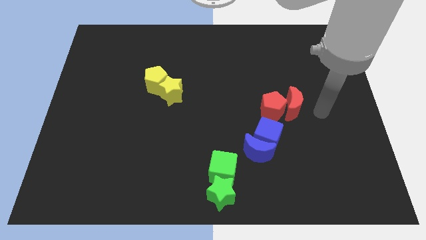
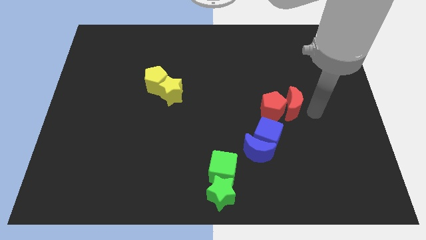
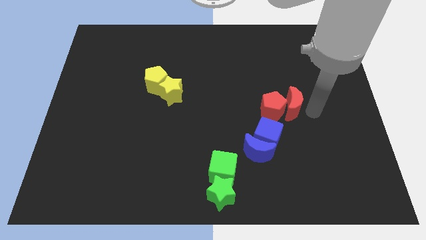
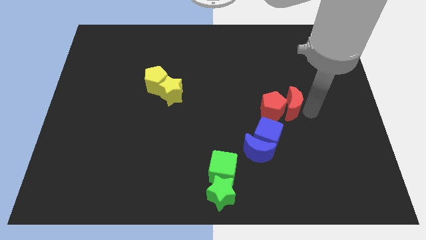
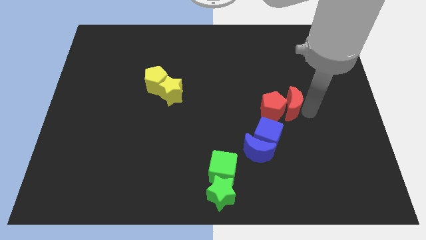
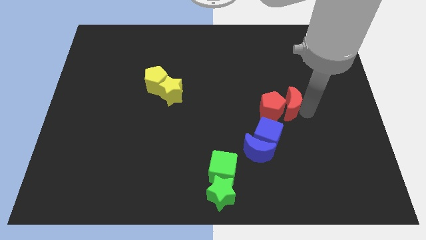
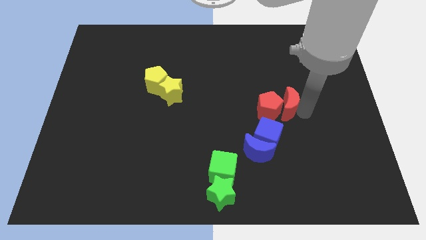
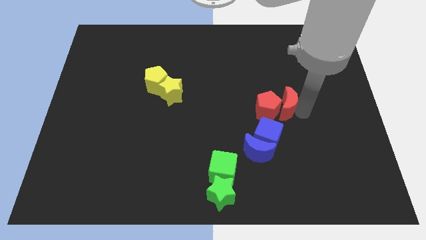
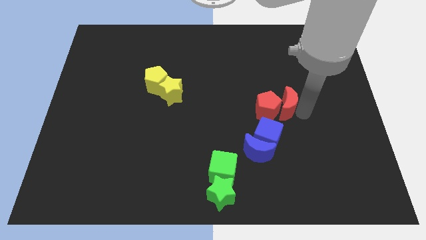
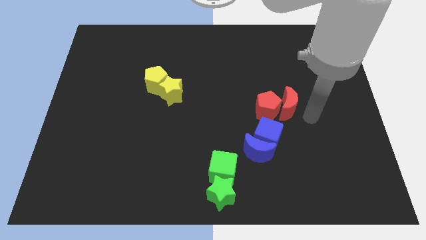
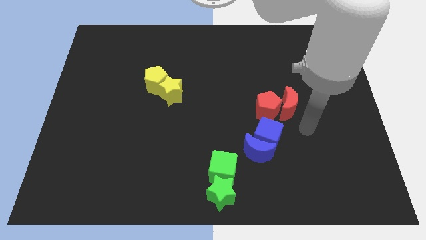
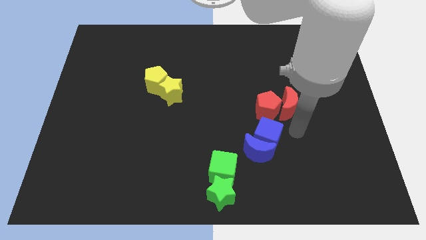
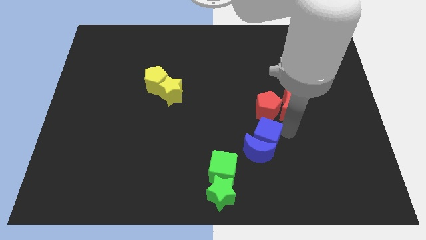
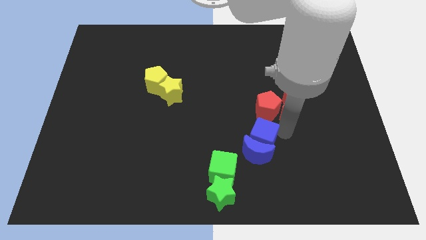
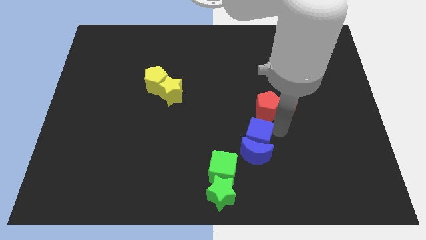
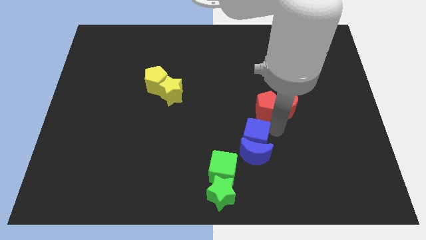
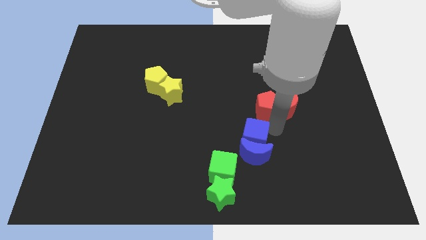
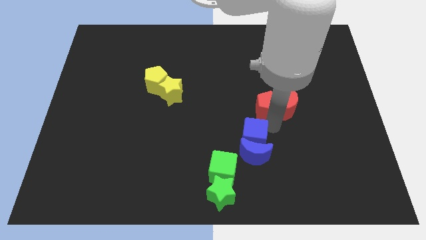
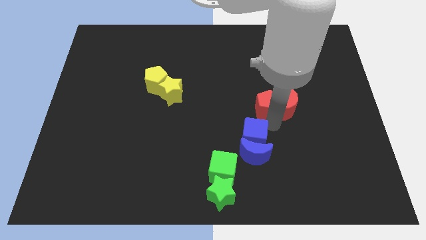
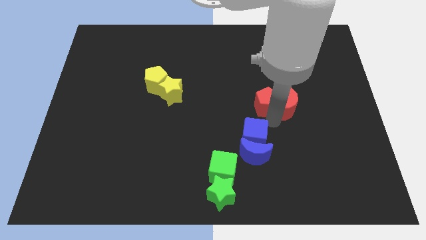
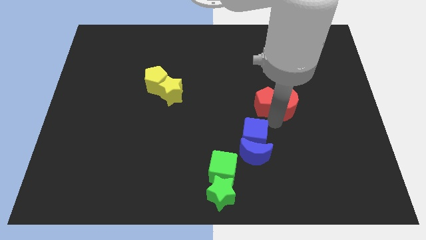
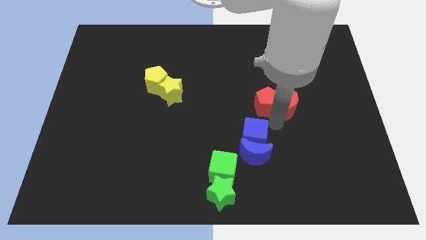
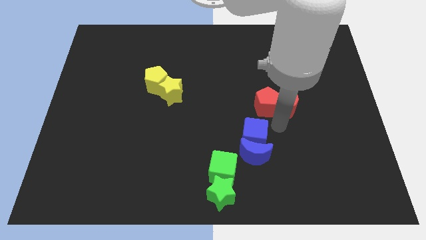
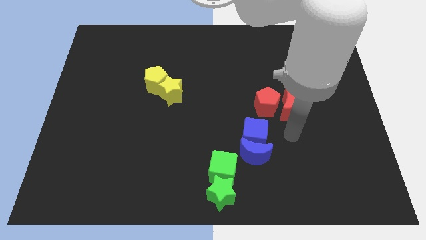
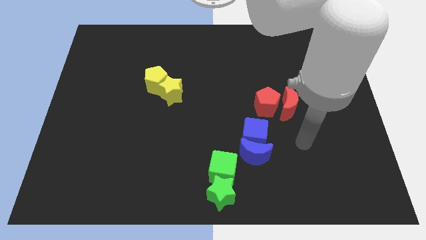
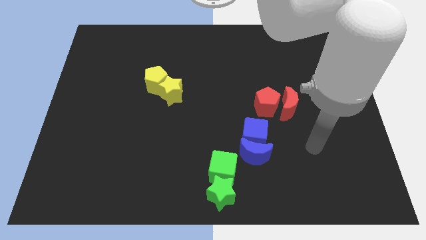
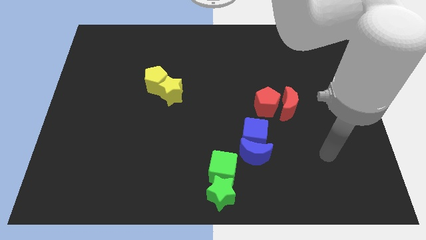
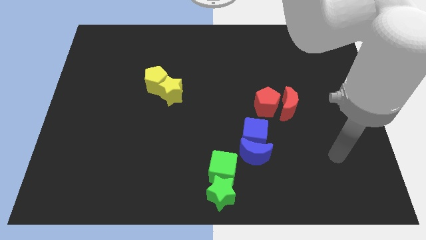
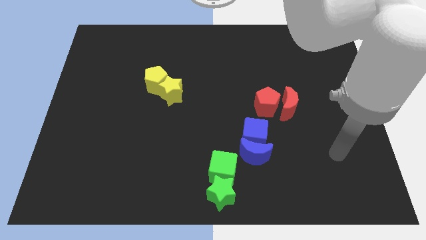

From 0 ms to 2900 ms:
push blue cube slightly to the left side

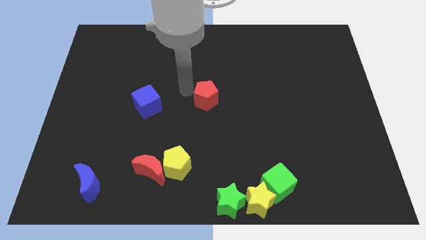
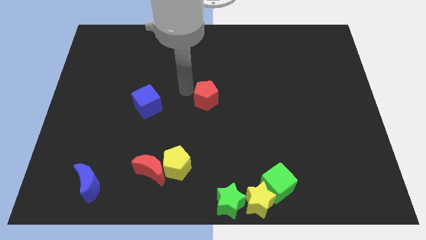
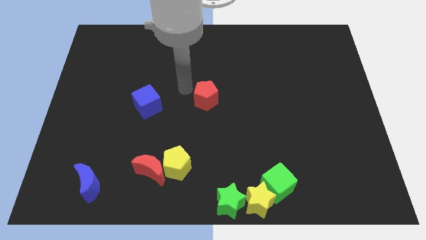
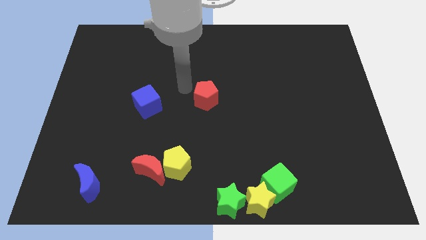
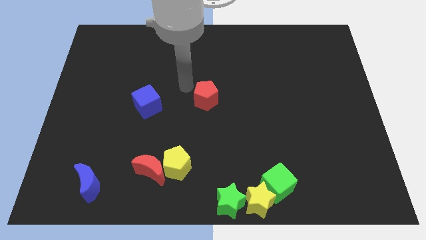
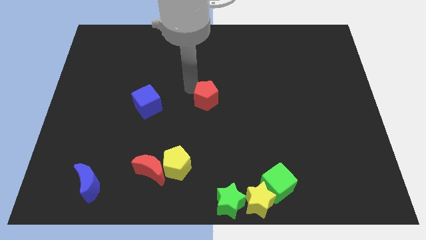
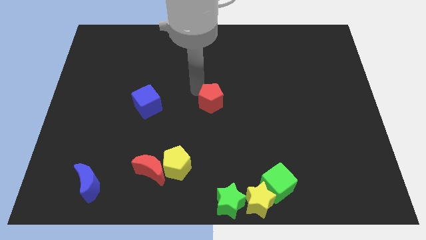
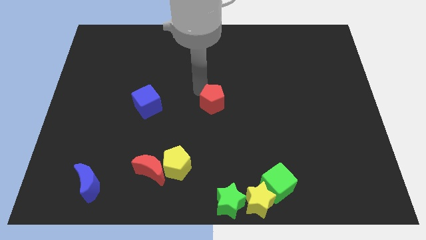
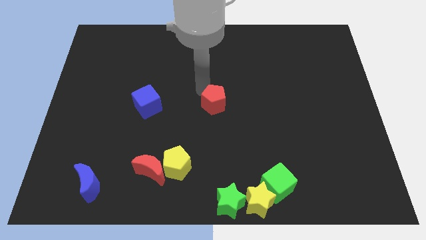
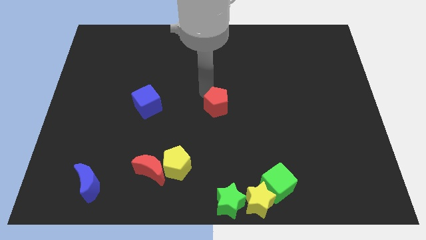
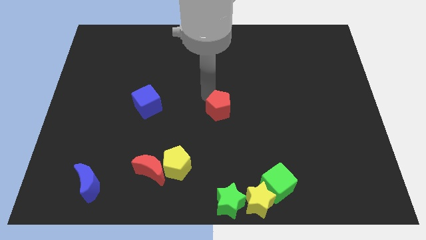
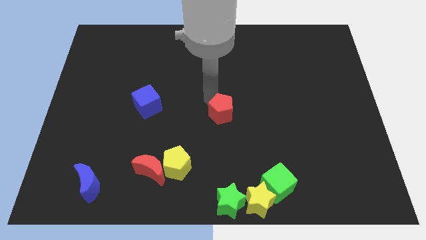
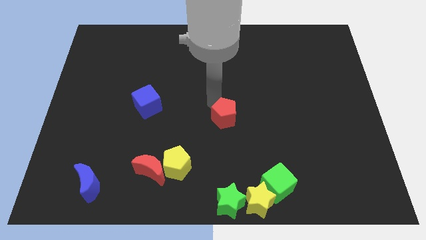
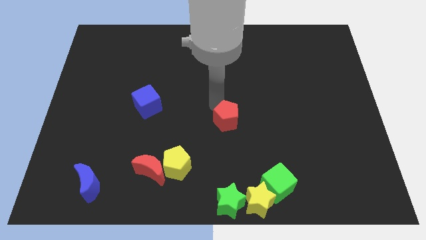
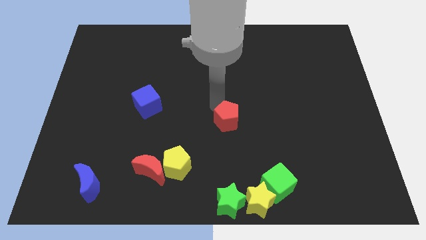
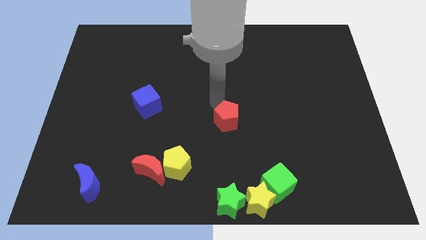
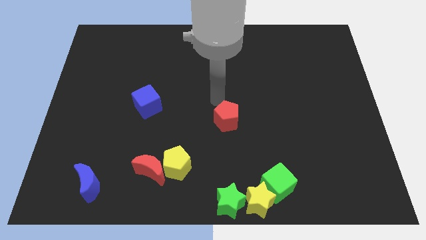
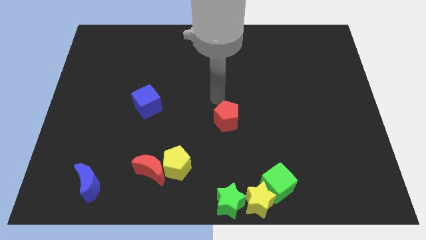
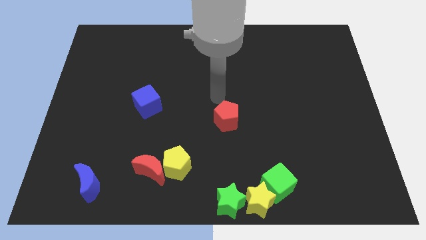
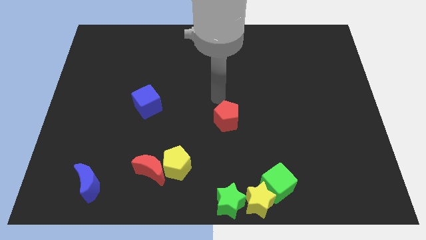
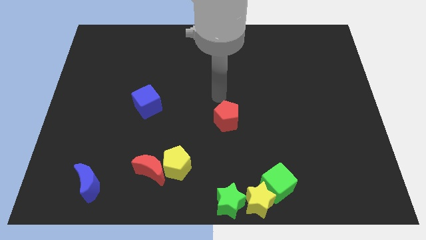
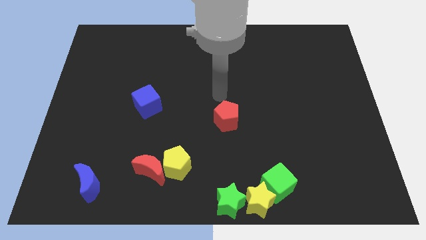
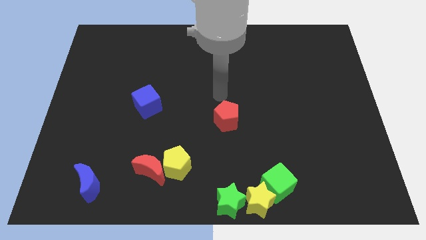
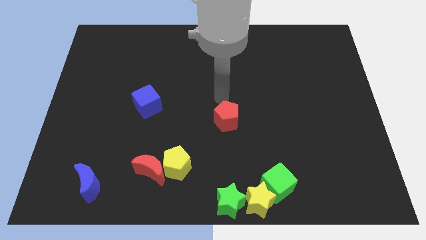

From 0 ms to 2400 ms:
move the red pentagon towards the center of the board

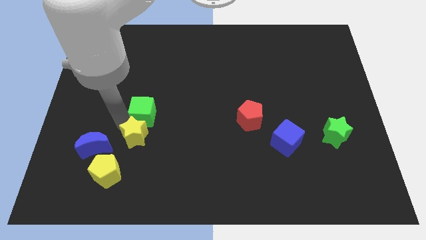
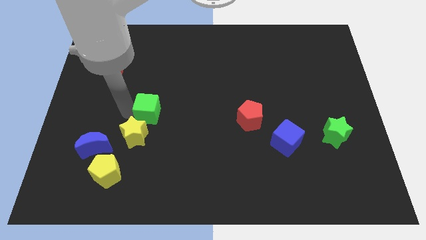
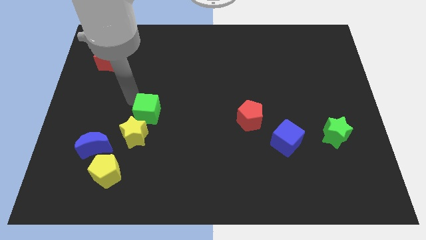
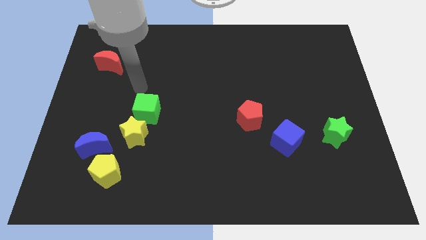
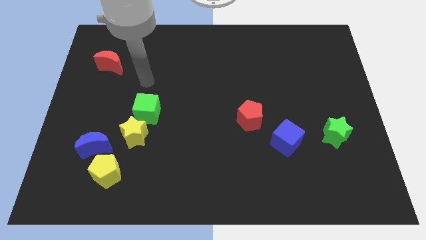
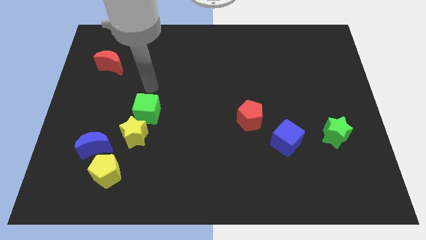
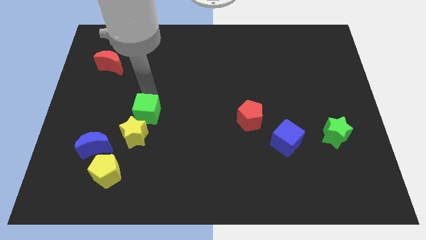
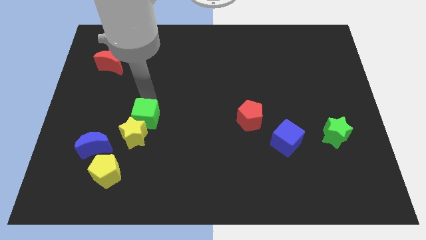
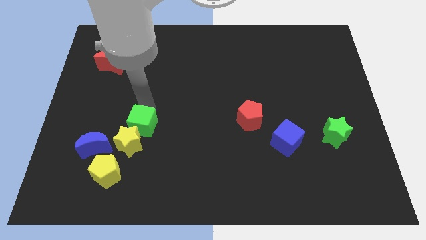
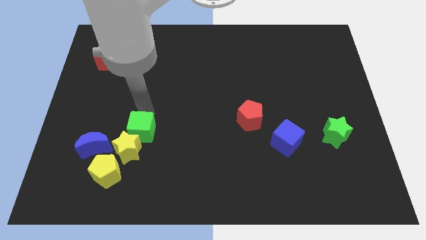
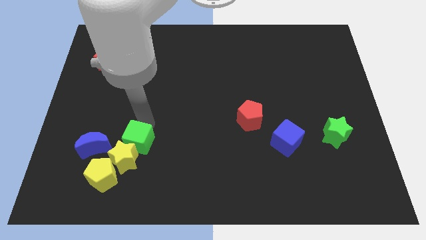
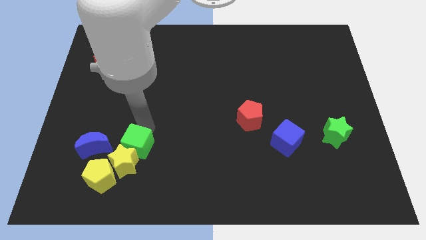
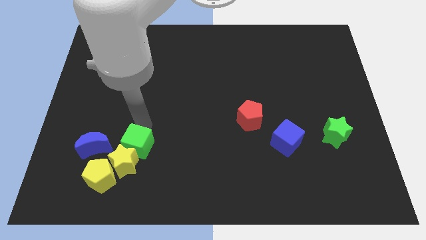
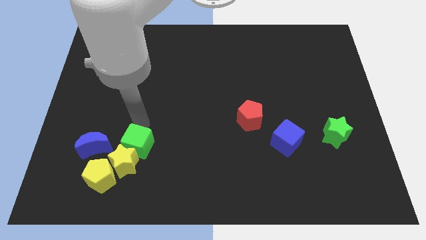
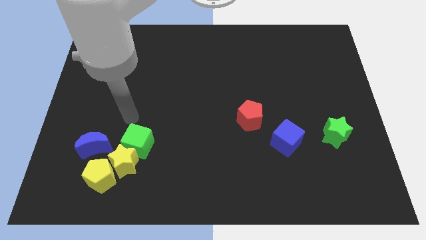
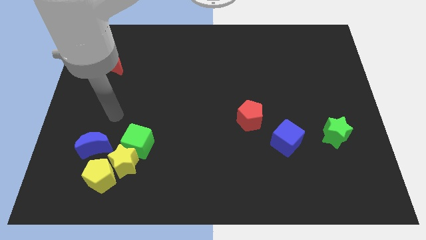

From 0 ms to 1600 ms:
push the green cube and yellow star towards the yellow pentagon

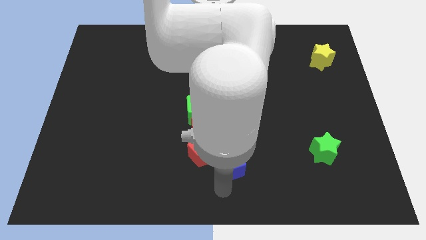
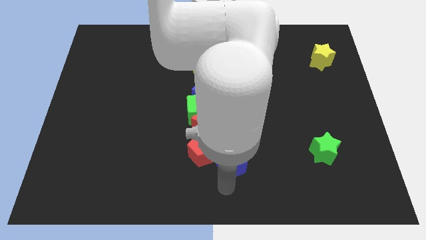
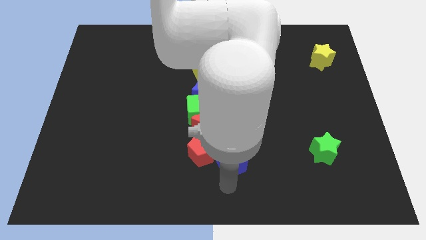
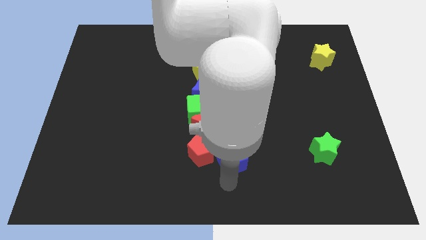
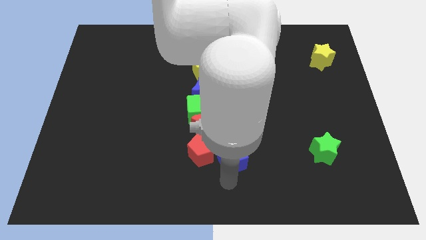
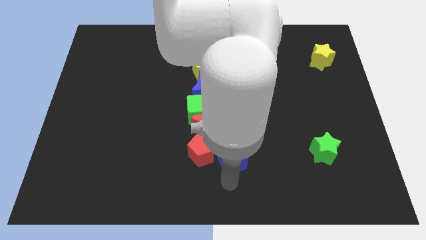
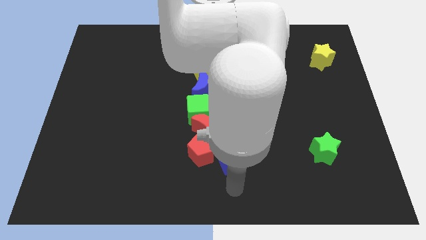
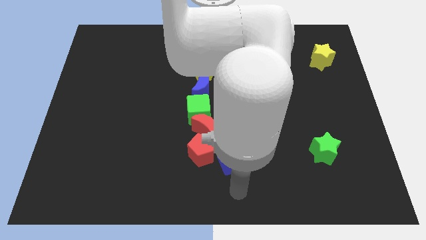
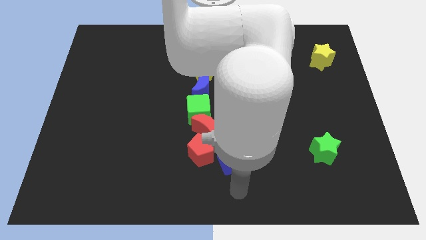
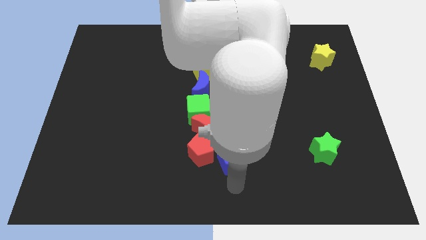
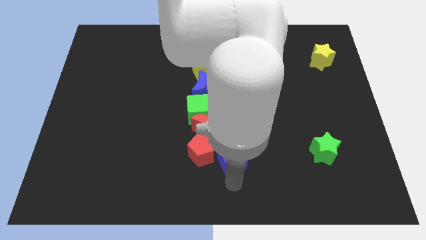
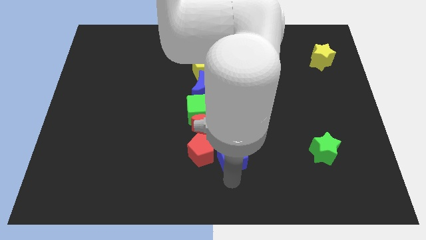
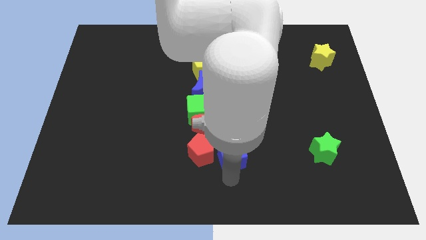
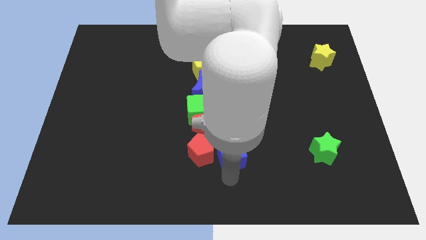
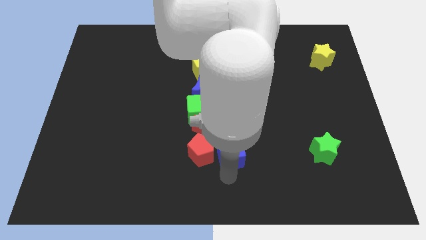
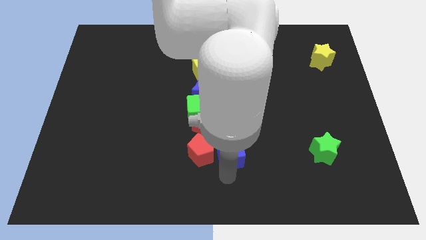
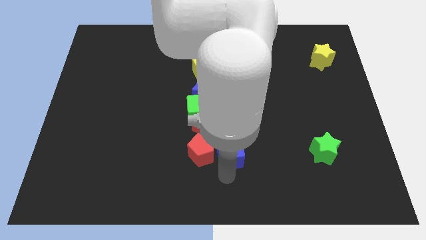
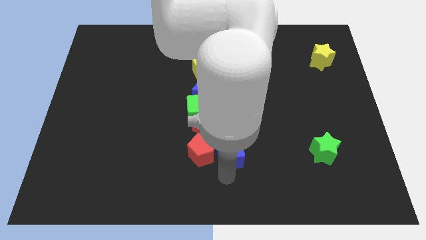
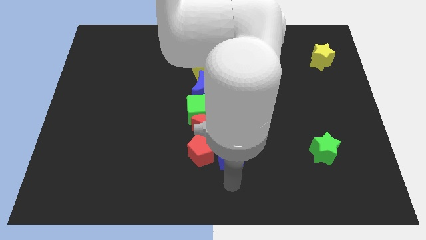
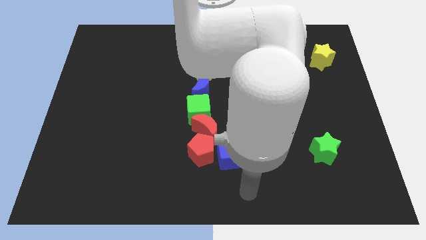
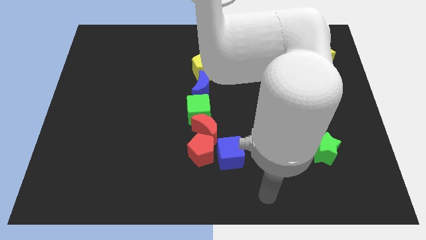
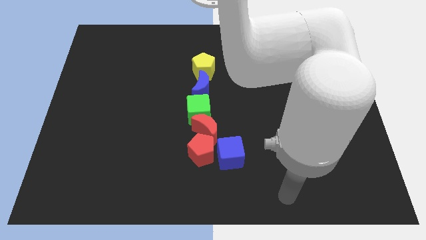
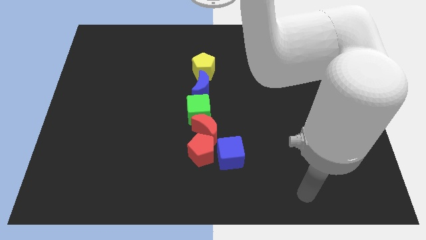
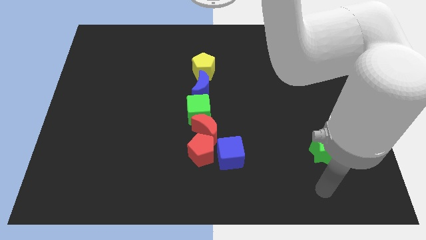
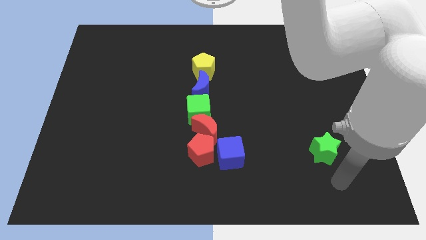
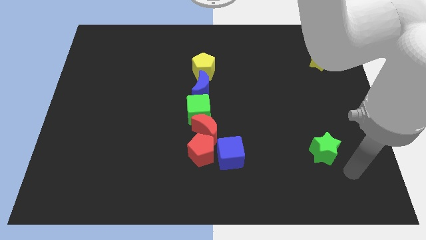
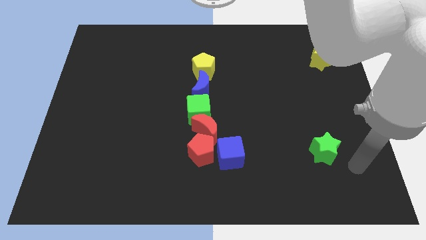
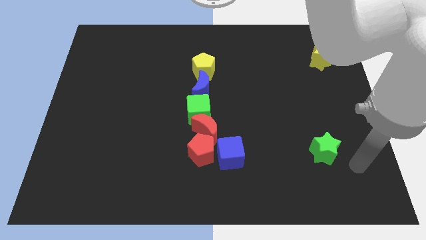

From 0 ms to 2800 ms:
place the blue cube to the right of the red pentagon
